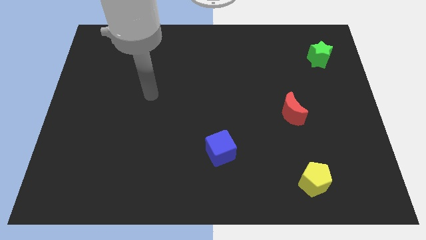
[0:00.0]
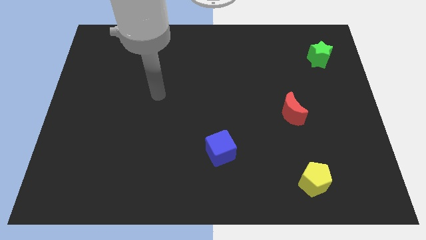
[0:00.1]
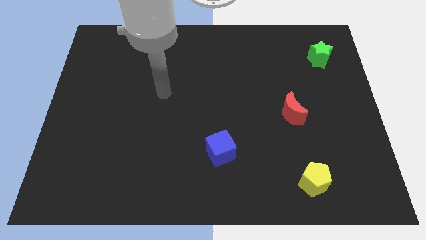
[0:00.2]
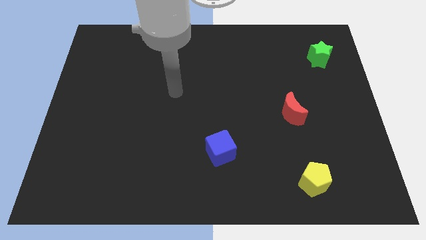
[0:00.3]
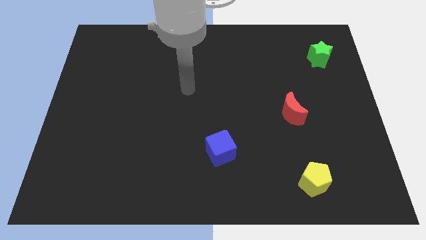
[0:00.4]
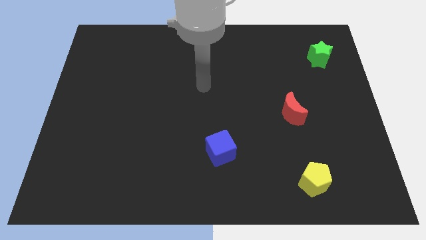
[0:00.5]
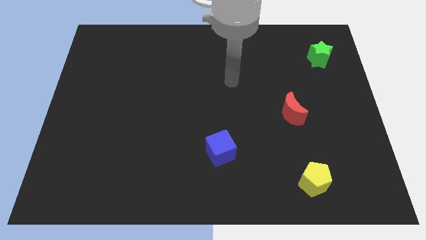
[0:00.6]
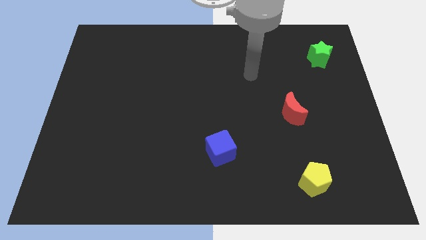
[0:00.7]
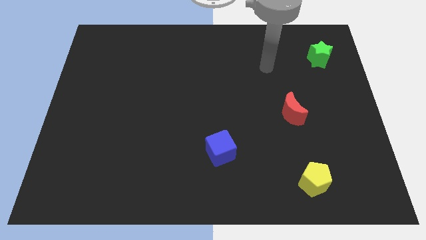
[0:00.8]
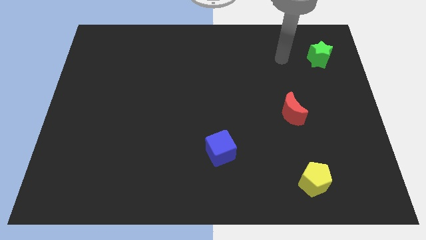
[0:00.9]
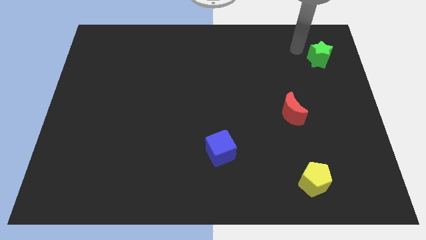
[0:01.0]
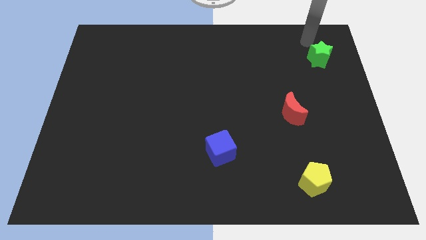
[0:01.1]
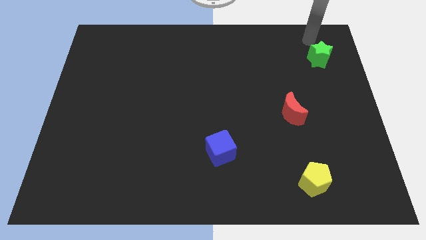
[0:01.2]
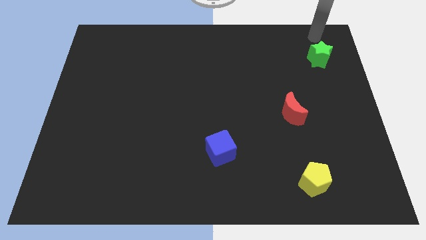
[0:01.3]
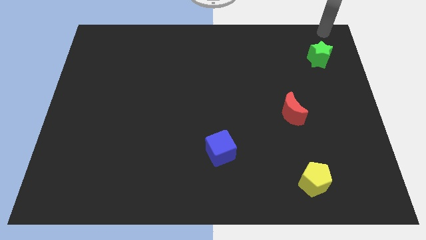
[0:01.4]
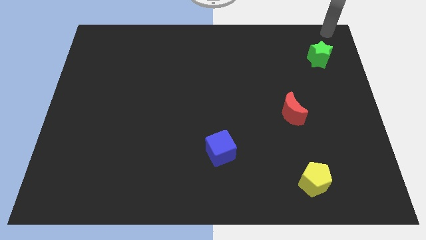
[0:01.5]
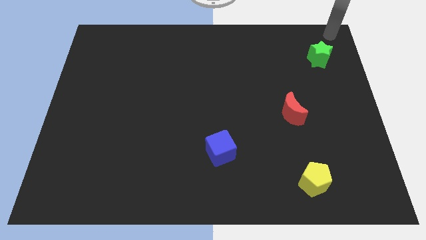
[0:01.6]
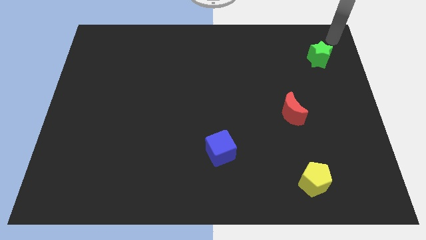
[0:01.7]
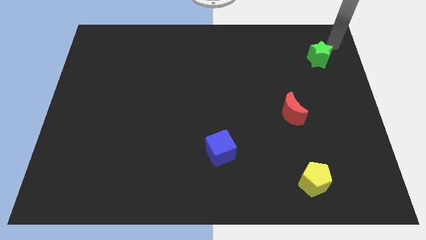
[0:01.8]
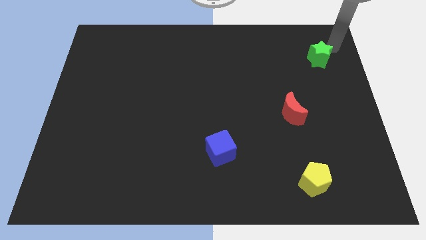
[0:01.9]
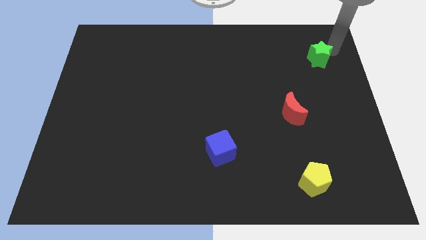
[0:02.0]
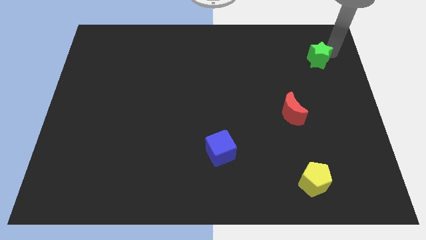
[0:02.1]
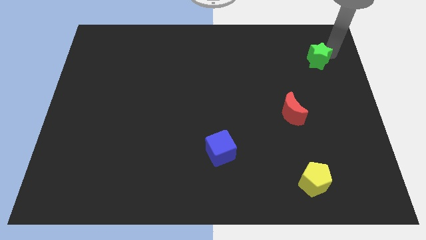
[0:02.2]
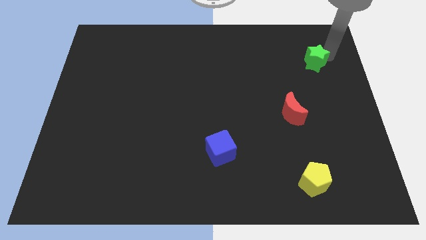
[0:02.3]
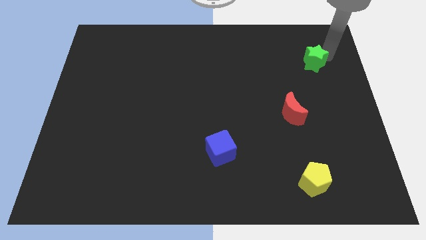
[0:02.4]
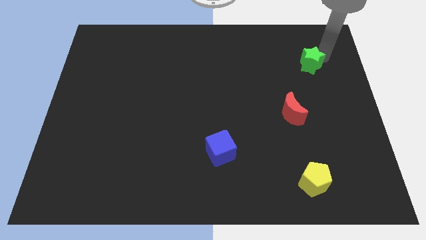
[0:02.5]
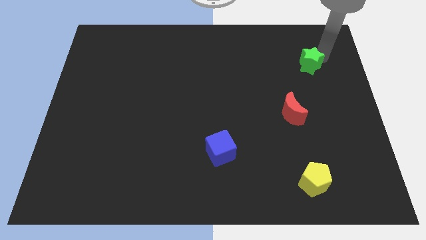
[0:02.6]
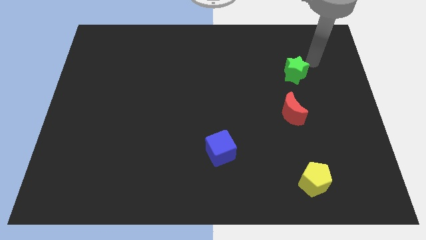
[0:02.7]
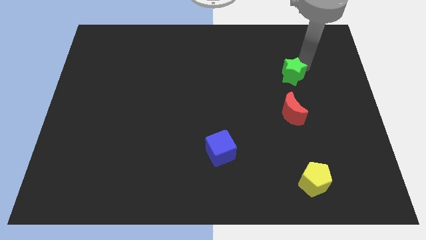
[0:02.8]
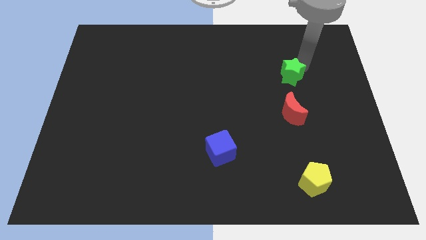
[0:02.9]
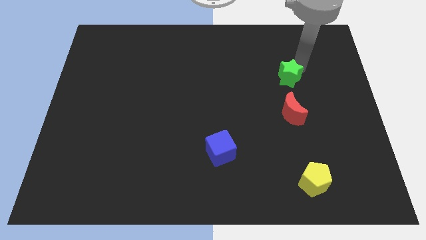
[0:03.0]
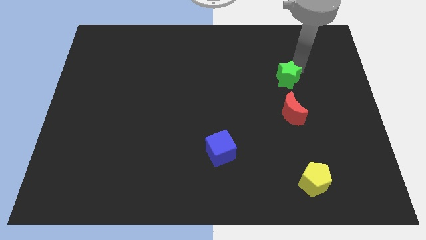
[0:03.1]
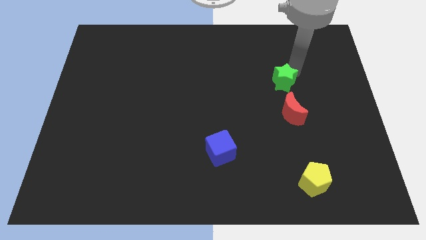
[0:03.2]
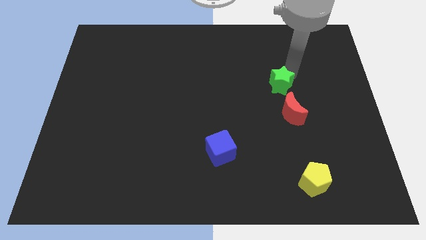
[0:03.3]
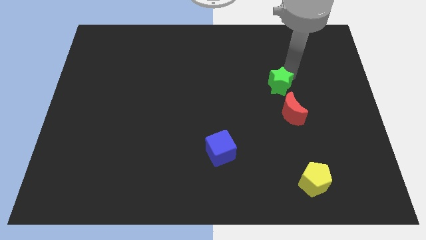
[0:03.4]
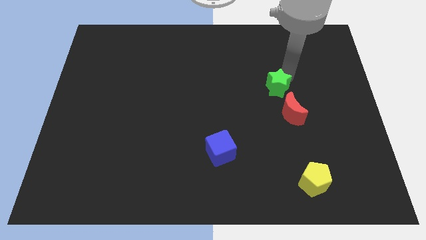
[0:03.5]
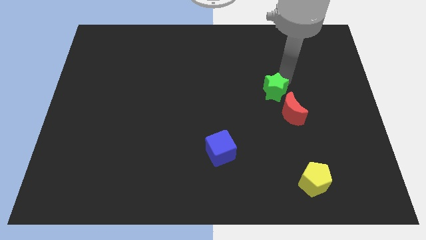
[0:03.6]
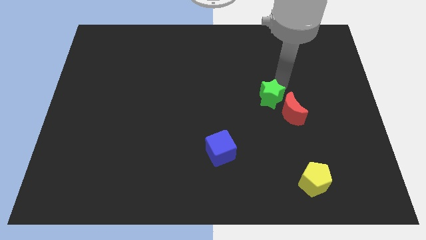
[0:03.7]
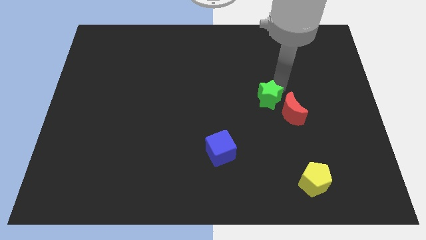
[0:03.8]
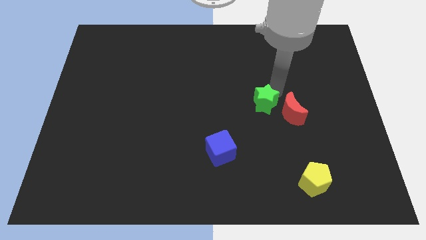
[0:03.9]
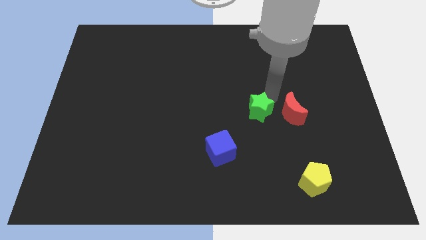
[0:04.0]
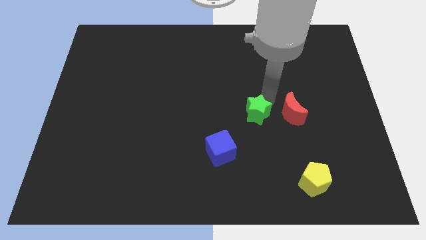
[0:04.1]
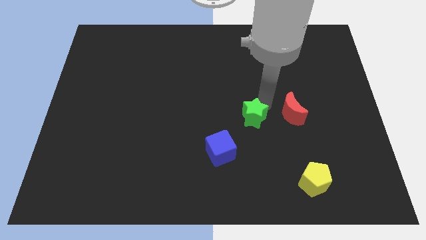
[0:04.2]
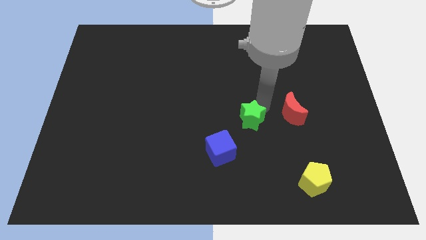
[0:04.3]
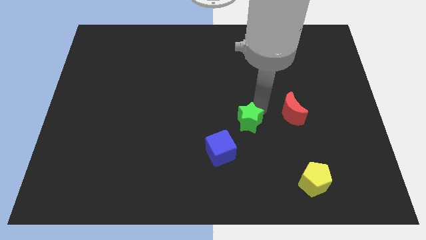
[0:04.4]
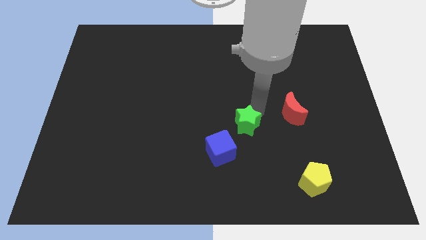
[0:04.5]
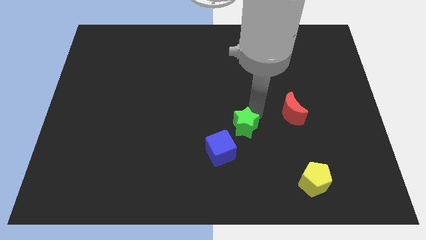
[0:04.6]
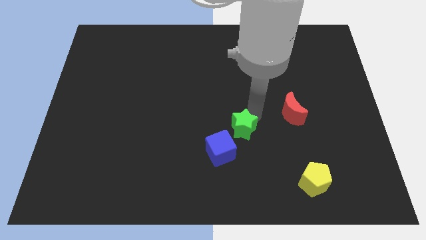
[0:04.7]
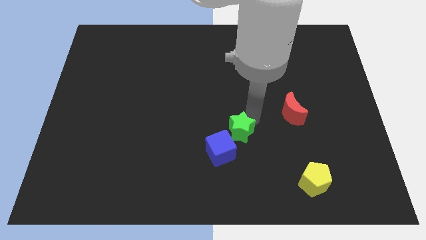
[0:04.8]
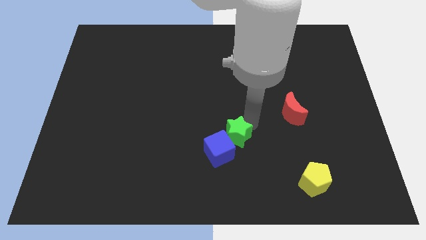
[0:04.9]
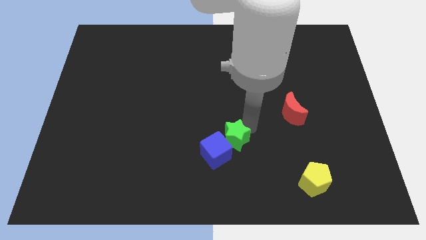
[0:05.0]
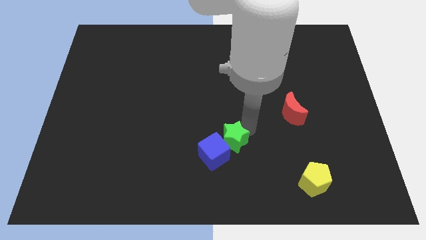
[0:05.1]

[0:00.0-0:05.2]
push the green star close to the cube

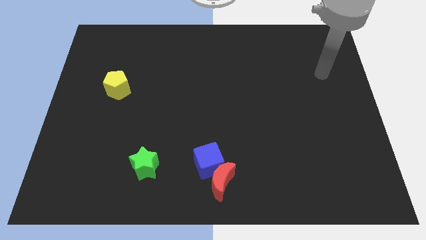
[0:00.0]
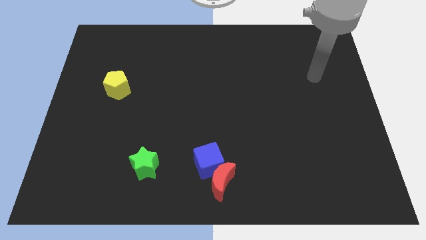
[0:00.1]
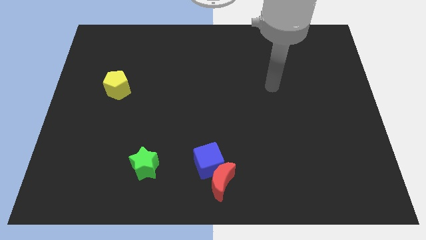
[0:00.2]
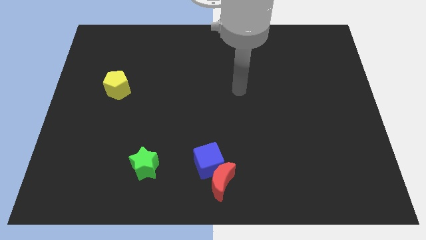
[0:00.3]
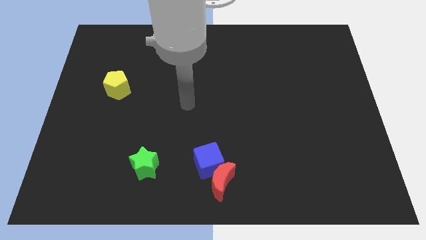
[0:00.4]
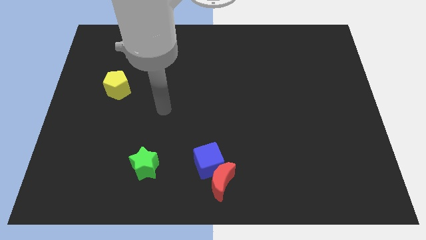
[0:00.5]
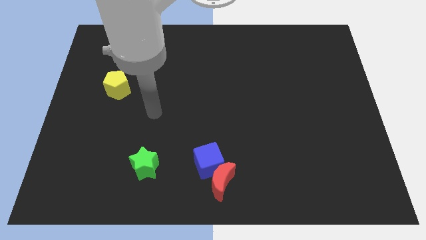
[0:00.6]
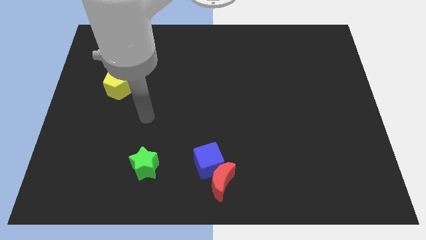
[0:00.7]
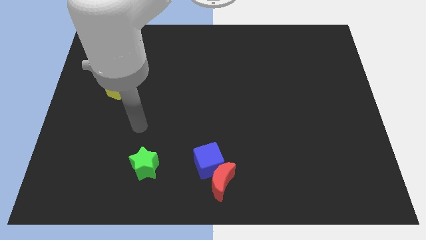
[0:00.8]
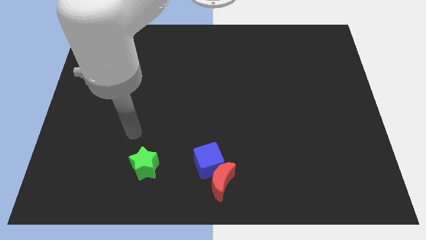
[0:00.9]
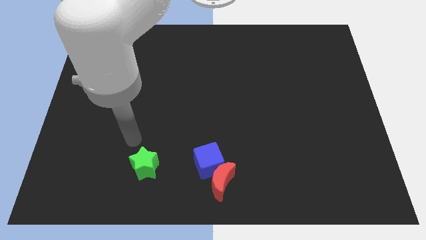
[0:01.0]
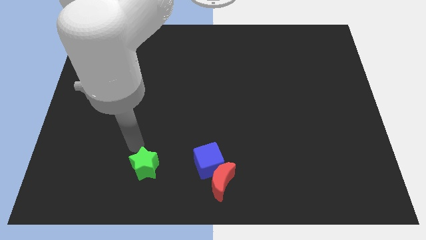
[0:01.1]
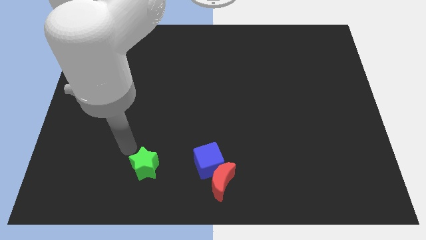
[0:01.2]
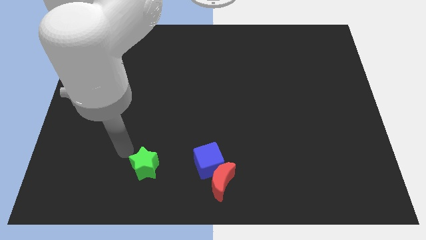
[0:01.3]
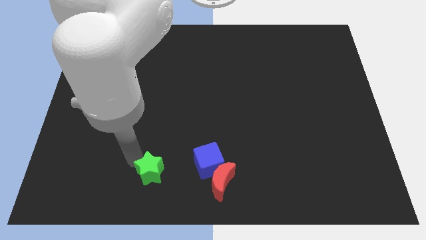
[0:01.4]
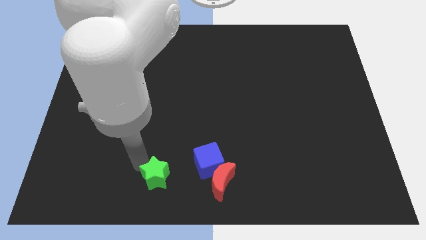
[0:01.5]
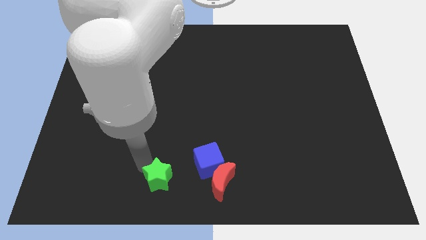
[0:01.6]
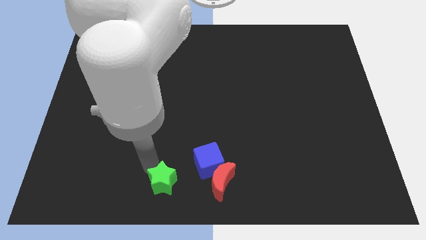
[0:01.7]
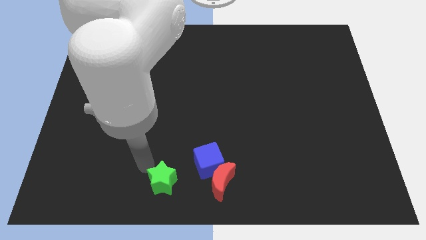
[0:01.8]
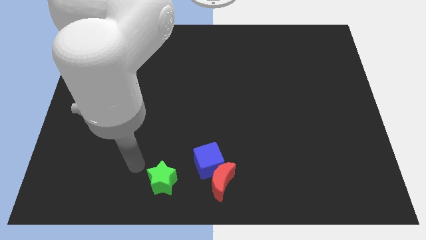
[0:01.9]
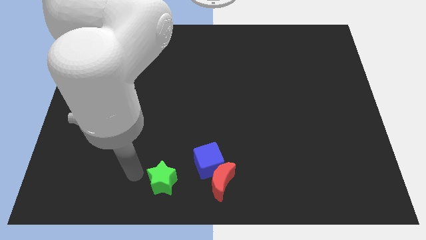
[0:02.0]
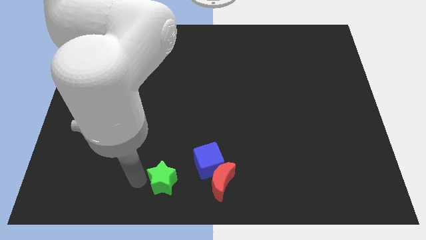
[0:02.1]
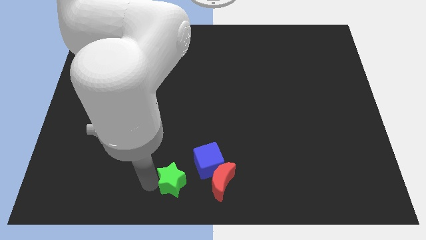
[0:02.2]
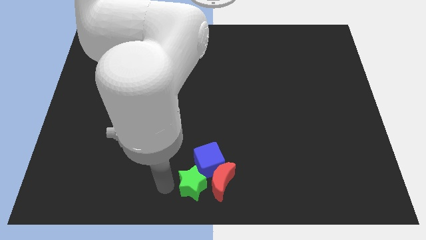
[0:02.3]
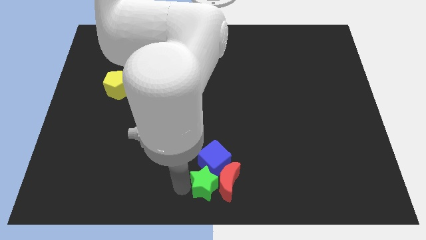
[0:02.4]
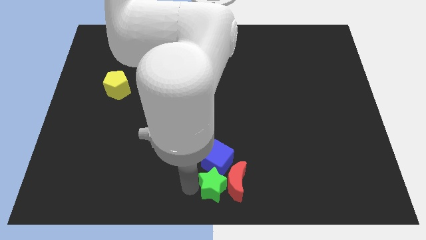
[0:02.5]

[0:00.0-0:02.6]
push the green block next to the moon

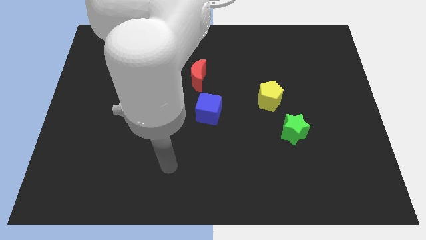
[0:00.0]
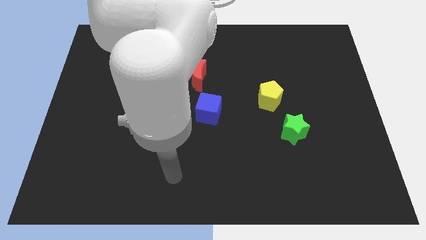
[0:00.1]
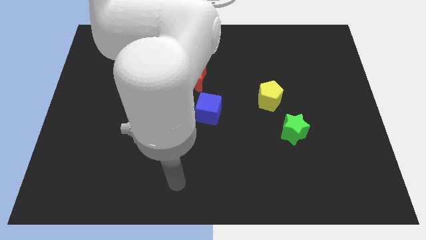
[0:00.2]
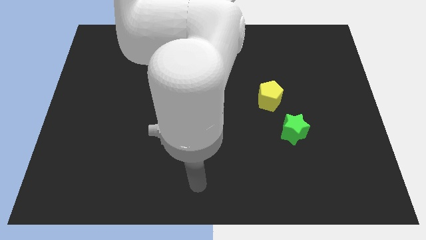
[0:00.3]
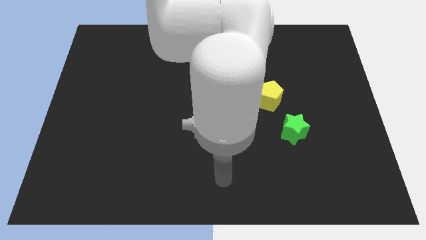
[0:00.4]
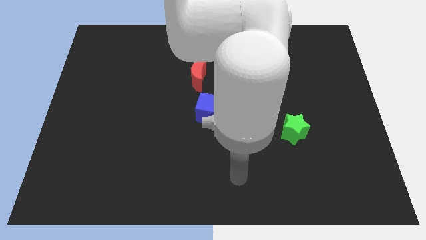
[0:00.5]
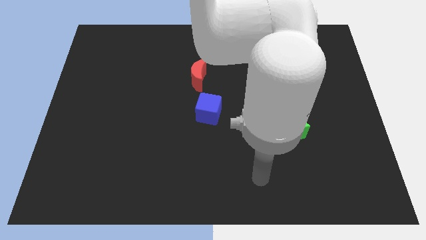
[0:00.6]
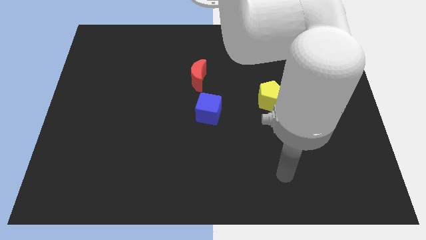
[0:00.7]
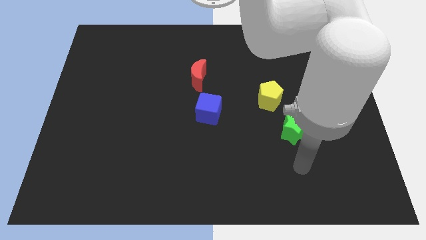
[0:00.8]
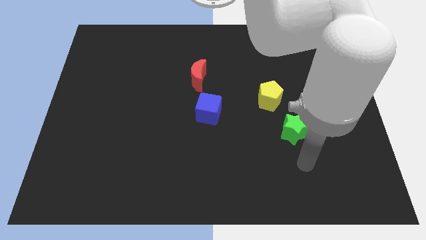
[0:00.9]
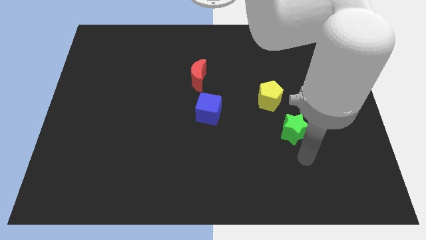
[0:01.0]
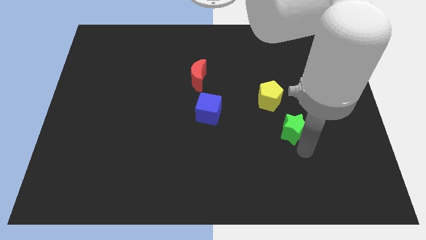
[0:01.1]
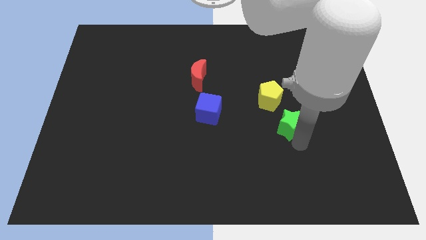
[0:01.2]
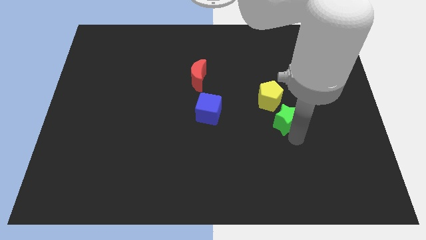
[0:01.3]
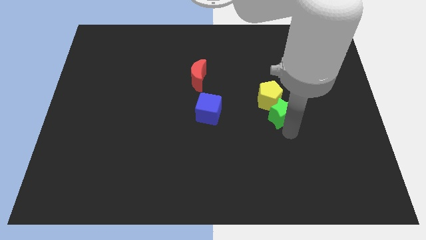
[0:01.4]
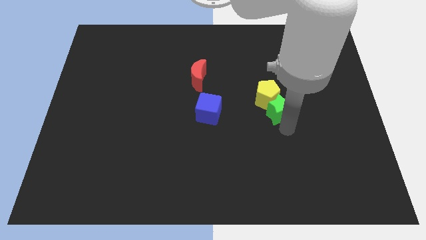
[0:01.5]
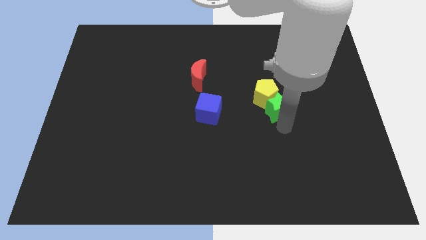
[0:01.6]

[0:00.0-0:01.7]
slide the star to the yellow block
